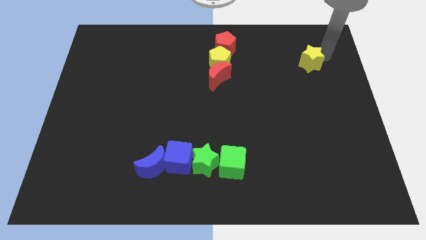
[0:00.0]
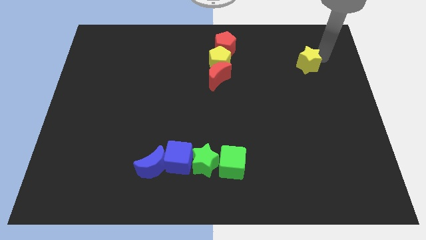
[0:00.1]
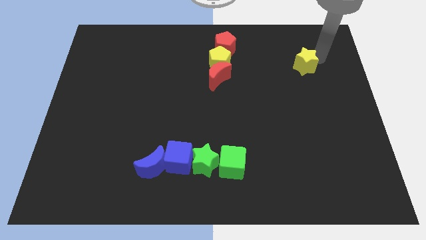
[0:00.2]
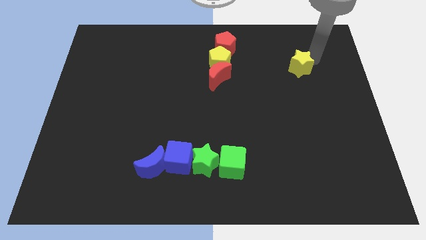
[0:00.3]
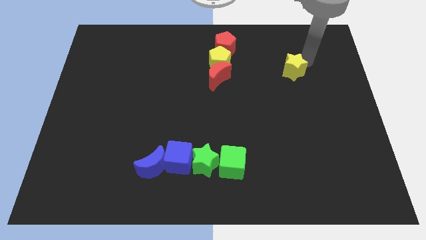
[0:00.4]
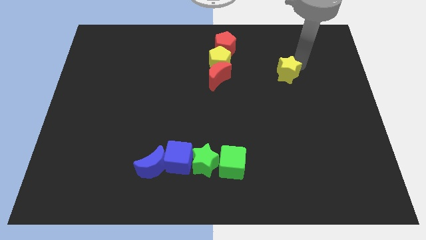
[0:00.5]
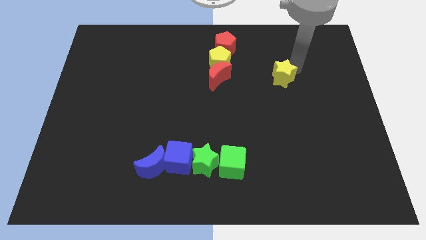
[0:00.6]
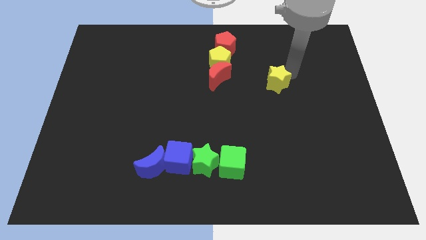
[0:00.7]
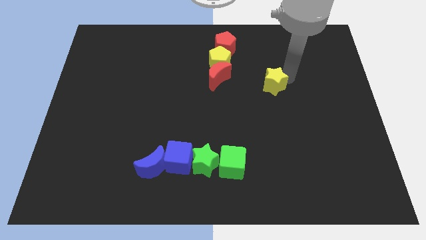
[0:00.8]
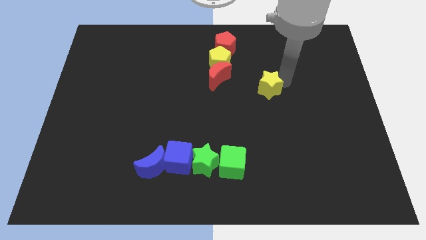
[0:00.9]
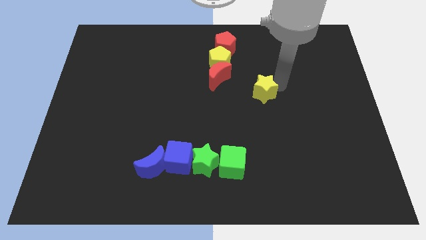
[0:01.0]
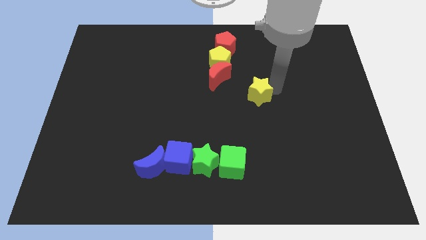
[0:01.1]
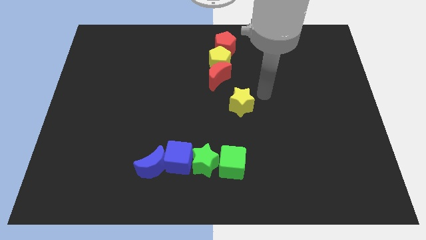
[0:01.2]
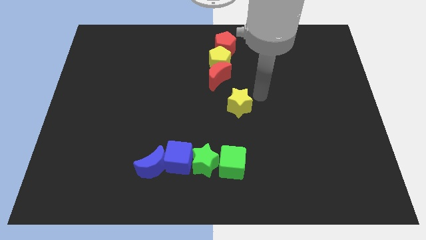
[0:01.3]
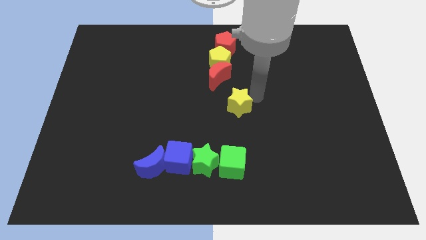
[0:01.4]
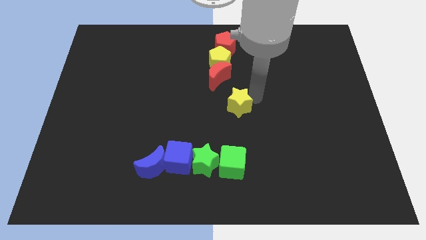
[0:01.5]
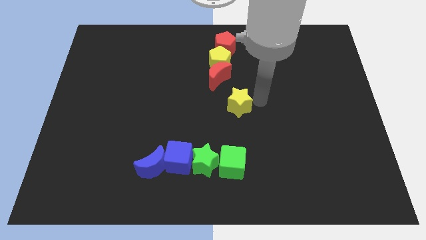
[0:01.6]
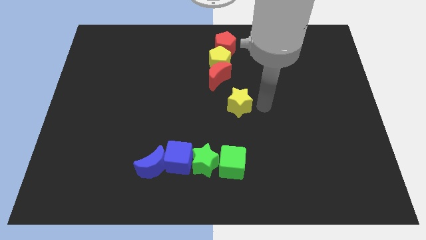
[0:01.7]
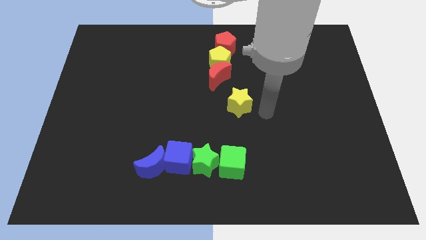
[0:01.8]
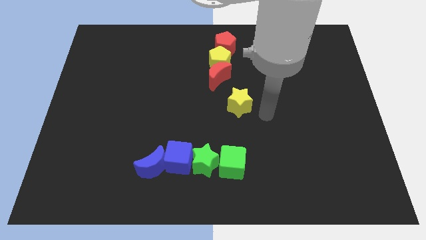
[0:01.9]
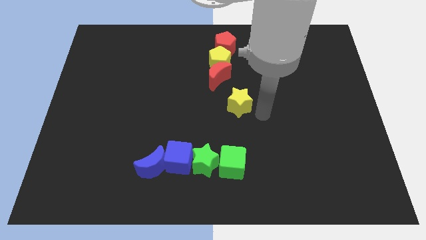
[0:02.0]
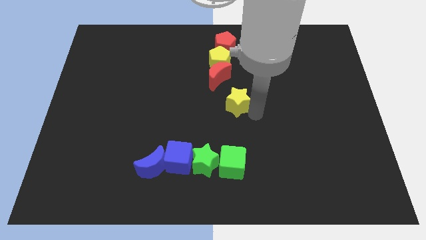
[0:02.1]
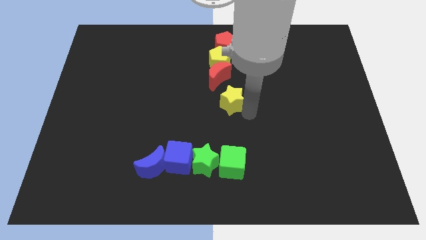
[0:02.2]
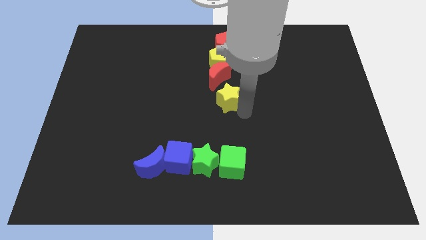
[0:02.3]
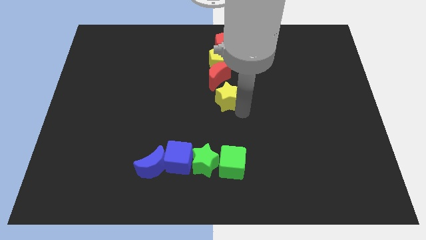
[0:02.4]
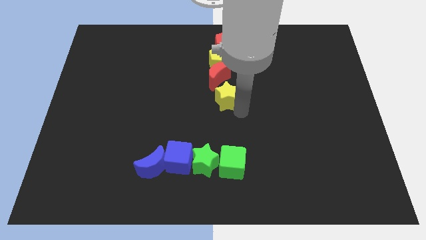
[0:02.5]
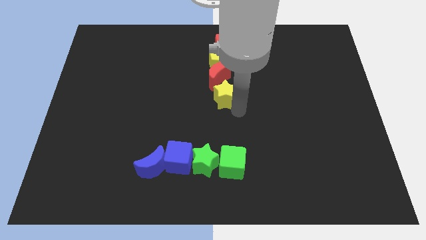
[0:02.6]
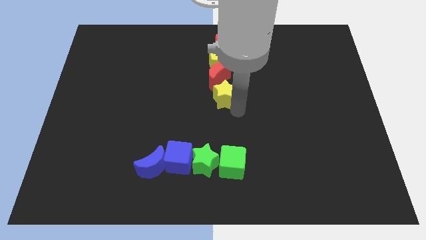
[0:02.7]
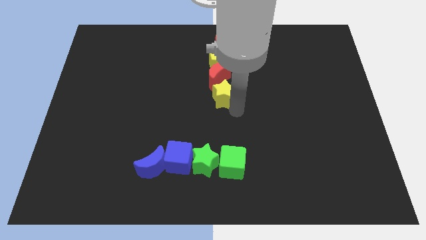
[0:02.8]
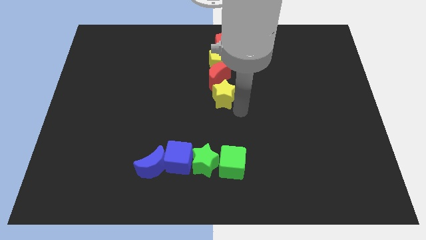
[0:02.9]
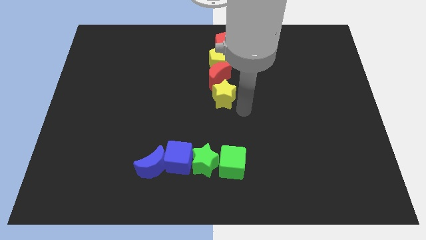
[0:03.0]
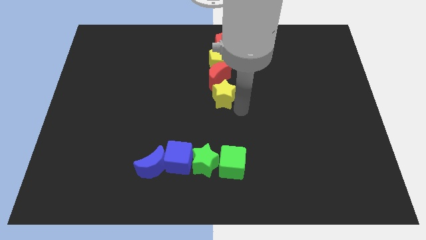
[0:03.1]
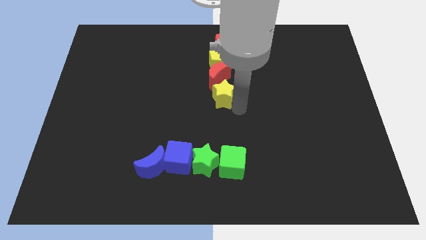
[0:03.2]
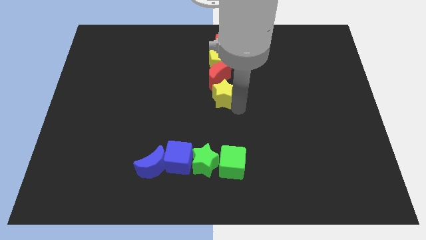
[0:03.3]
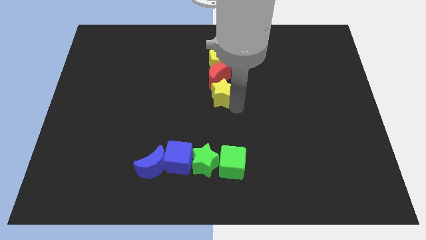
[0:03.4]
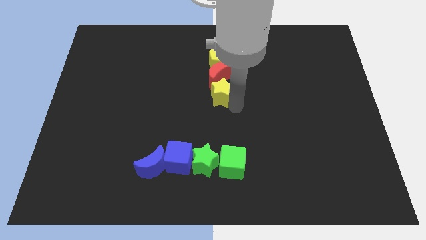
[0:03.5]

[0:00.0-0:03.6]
push the yellow star below the red crescent

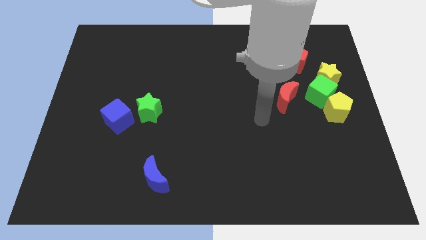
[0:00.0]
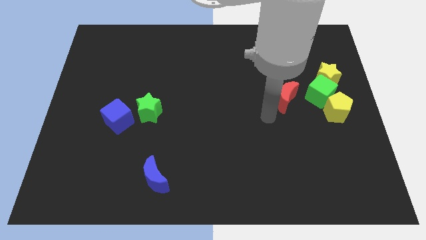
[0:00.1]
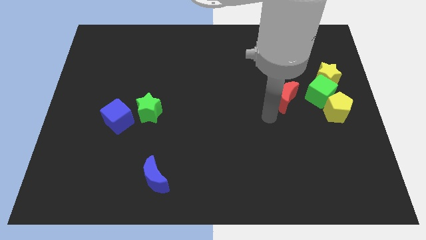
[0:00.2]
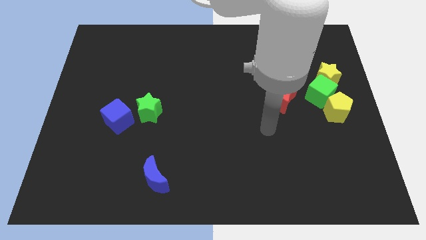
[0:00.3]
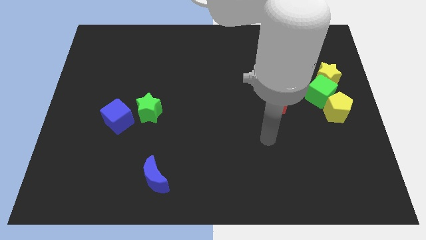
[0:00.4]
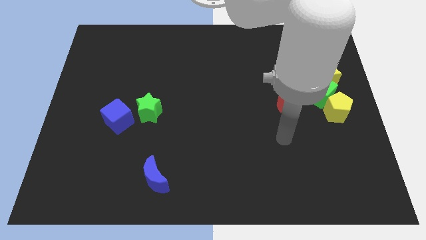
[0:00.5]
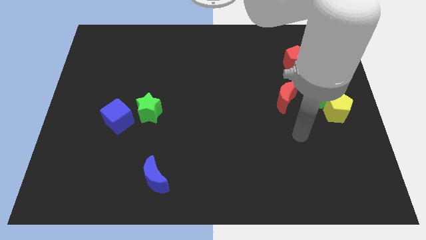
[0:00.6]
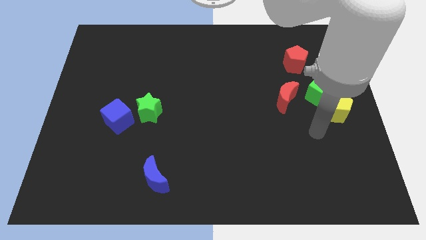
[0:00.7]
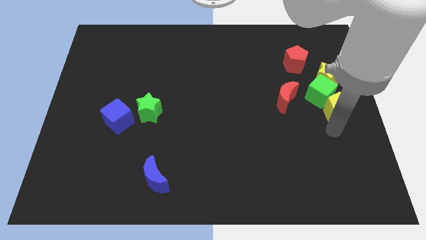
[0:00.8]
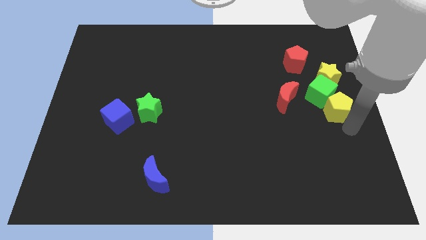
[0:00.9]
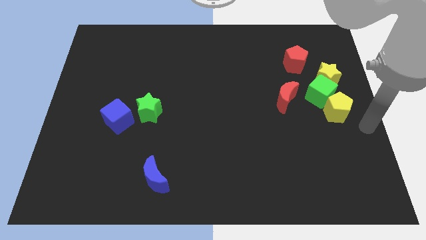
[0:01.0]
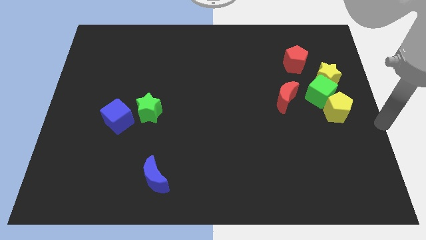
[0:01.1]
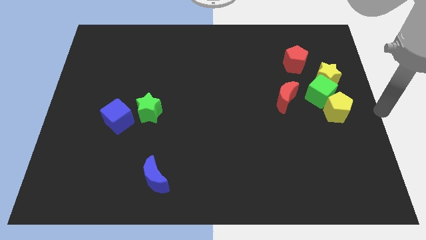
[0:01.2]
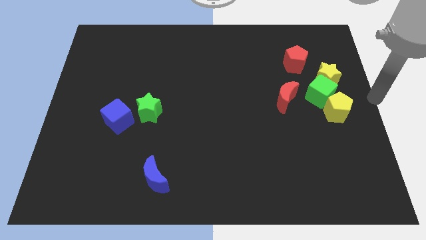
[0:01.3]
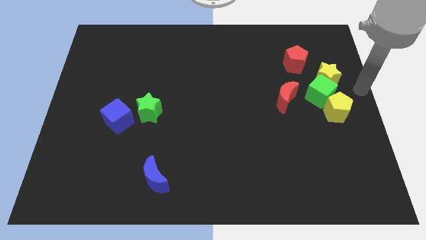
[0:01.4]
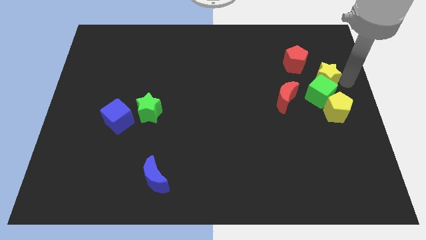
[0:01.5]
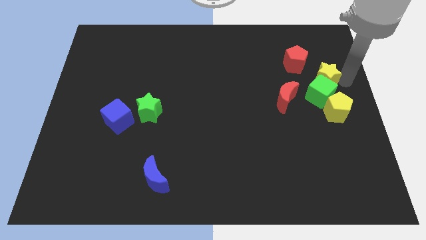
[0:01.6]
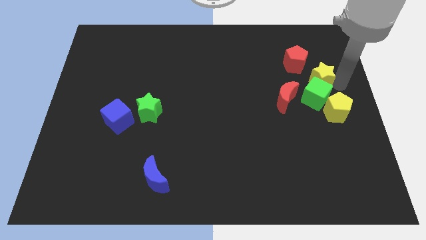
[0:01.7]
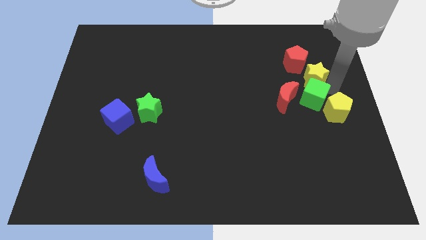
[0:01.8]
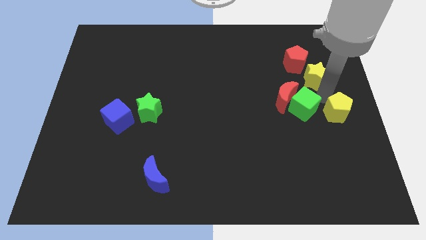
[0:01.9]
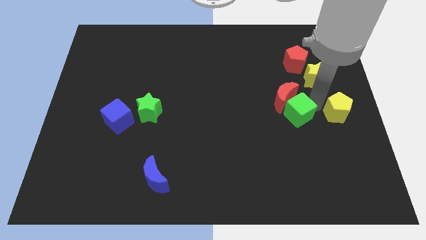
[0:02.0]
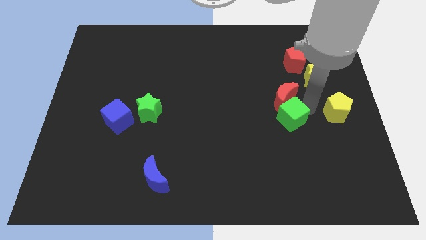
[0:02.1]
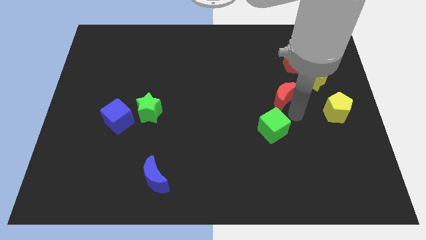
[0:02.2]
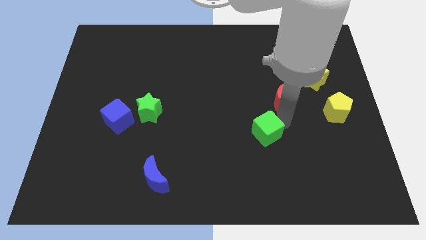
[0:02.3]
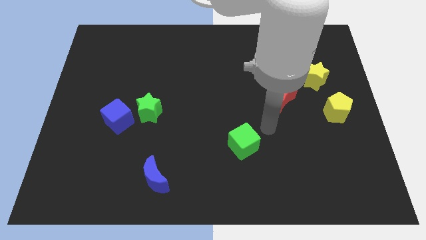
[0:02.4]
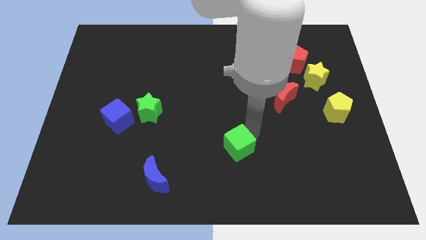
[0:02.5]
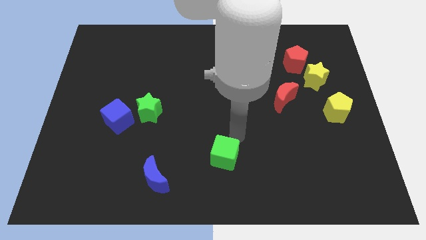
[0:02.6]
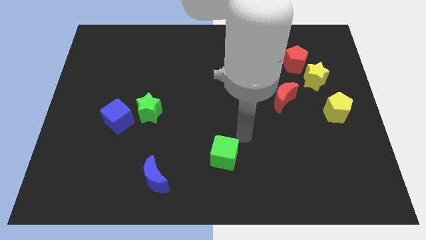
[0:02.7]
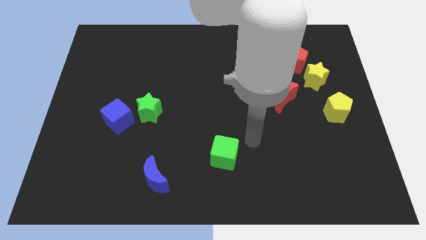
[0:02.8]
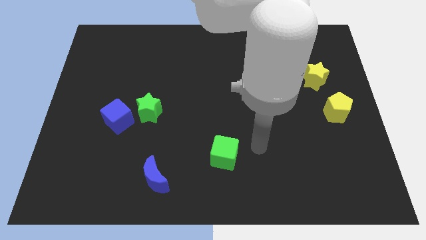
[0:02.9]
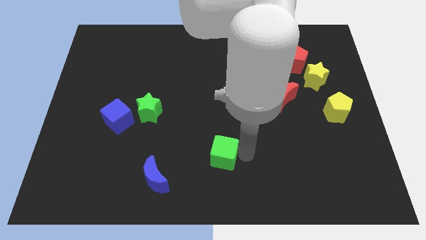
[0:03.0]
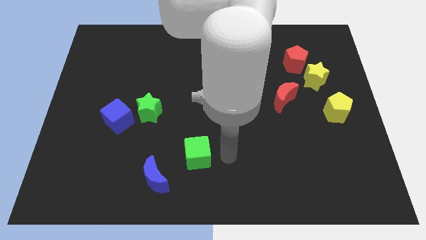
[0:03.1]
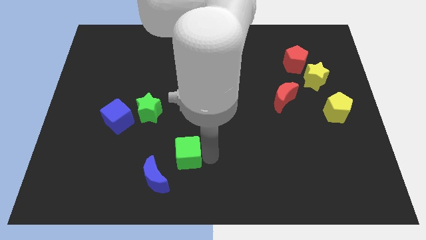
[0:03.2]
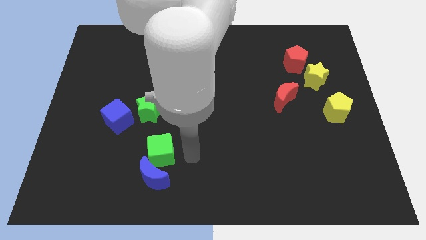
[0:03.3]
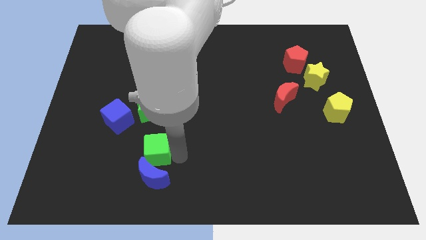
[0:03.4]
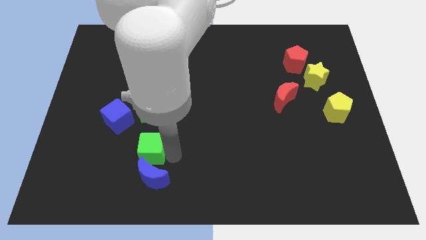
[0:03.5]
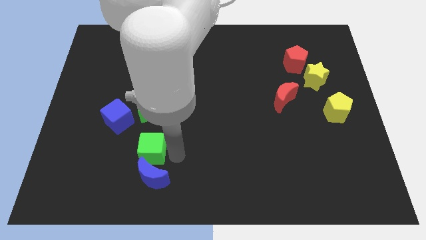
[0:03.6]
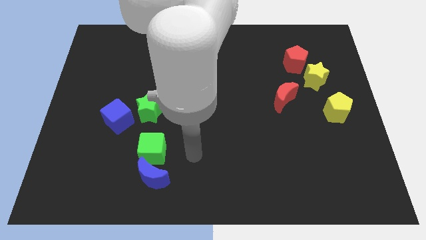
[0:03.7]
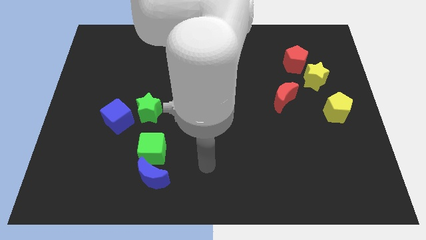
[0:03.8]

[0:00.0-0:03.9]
separate the green star from the yellow star

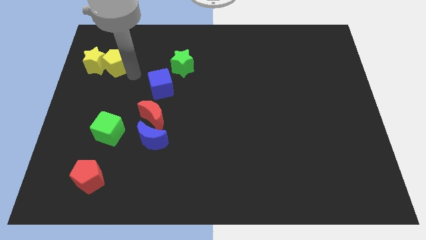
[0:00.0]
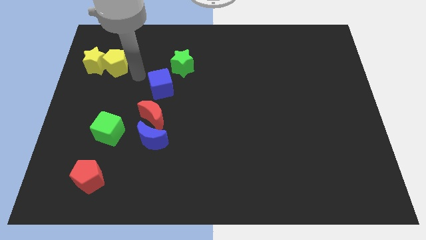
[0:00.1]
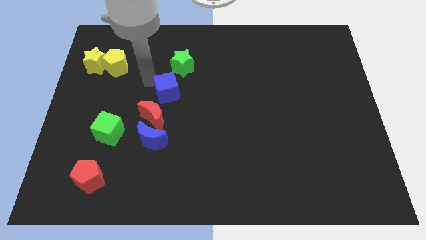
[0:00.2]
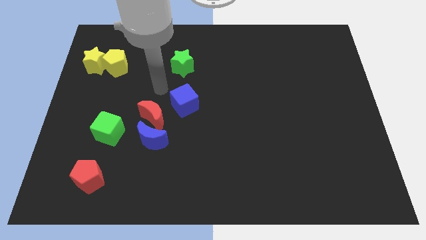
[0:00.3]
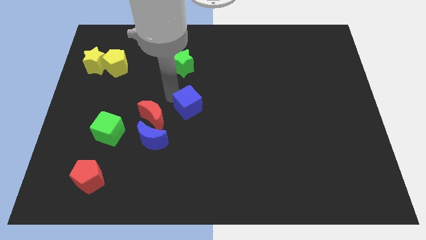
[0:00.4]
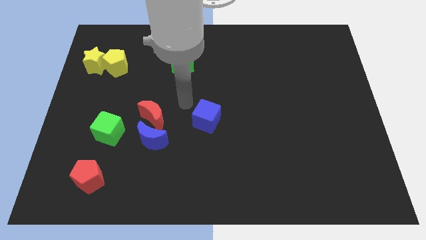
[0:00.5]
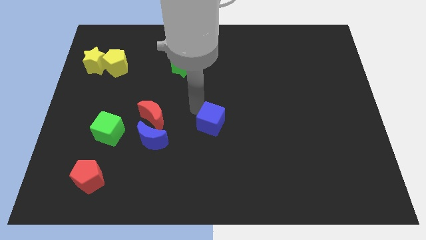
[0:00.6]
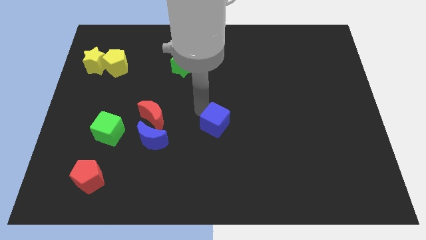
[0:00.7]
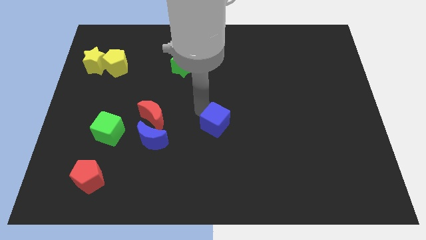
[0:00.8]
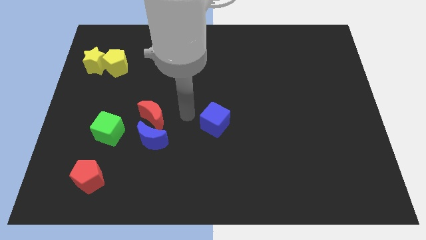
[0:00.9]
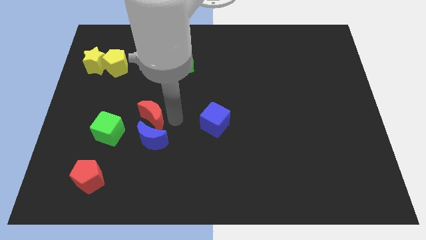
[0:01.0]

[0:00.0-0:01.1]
push the blue cube to the center of the board

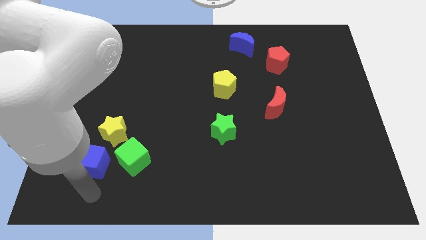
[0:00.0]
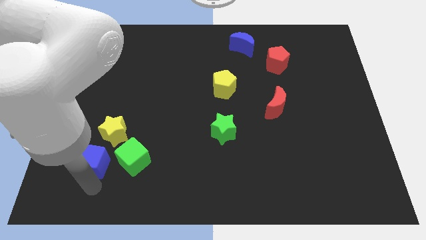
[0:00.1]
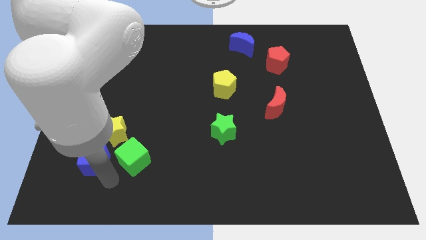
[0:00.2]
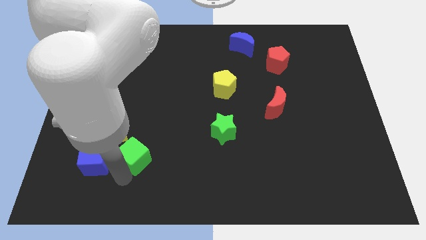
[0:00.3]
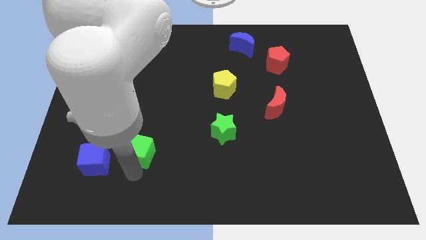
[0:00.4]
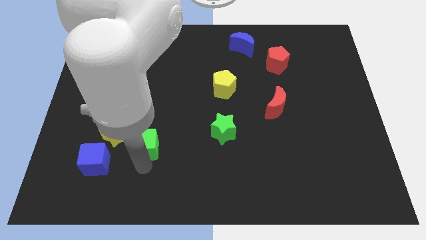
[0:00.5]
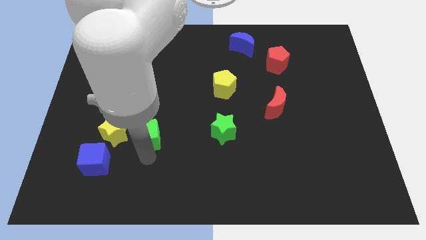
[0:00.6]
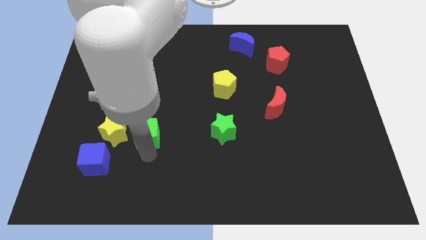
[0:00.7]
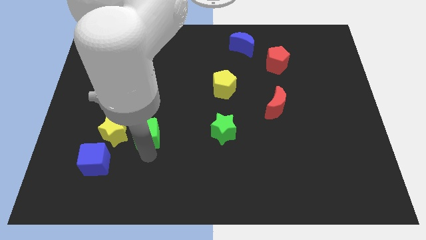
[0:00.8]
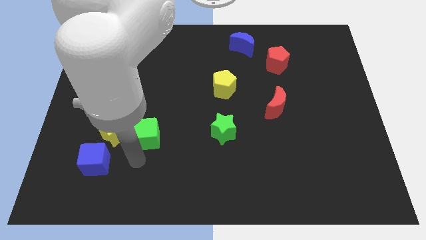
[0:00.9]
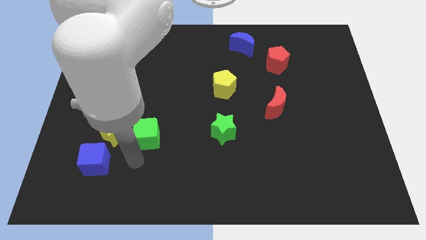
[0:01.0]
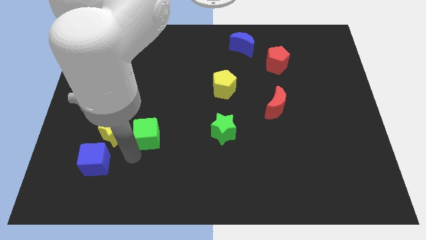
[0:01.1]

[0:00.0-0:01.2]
slide the green cube up slightly
